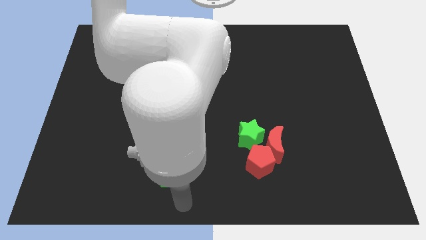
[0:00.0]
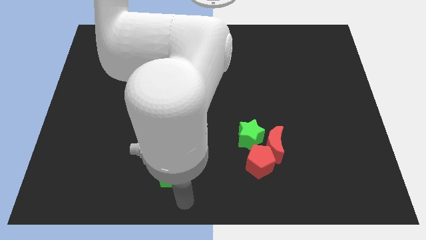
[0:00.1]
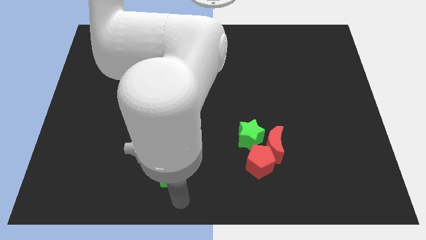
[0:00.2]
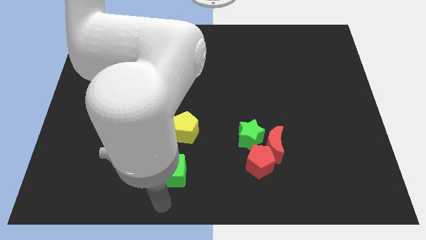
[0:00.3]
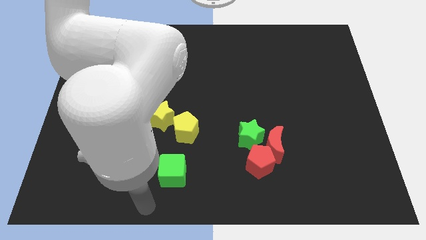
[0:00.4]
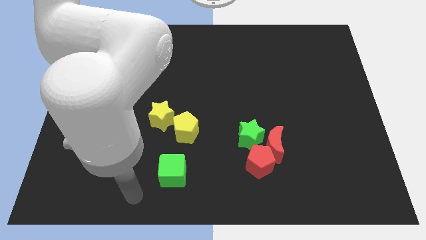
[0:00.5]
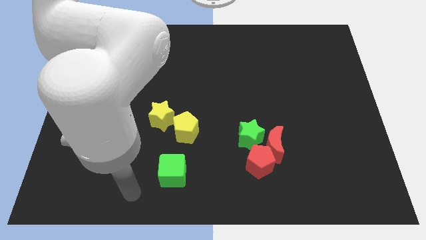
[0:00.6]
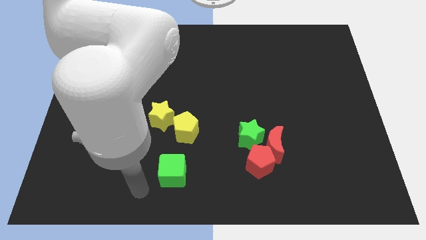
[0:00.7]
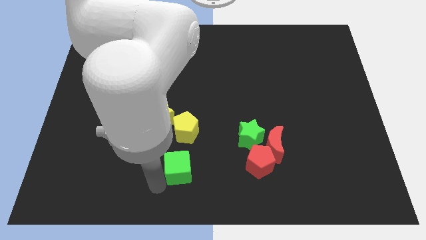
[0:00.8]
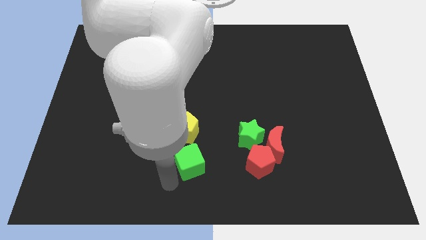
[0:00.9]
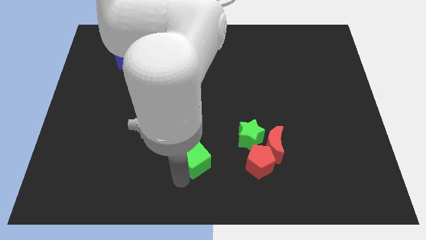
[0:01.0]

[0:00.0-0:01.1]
move the green cube towards the yellow pentagon

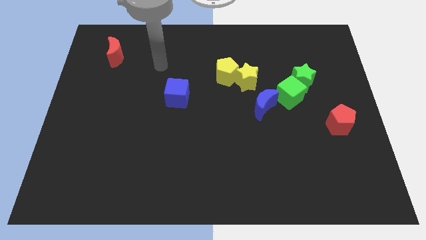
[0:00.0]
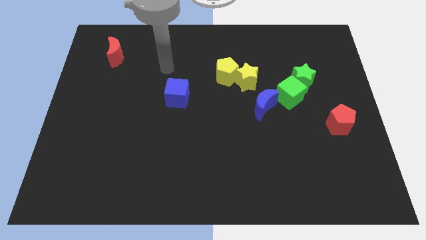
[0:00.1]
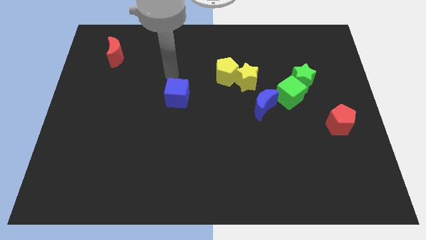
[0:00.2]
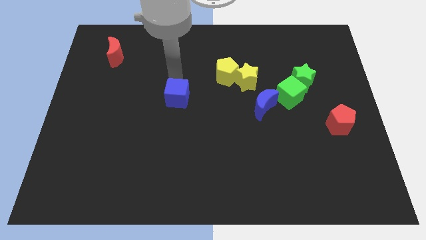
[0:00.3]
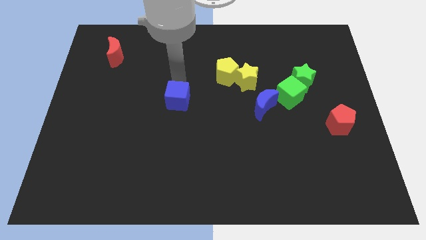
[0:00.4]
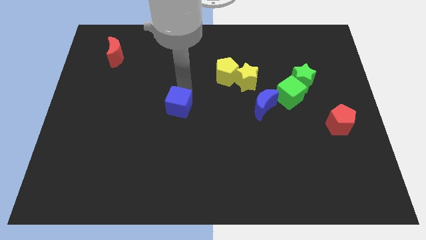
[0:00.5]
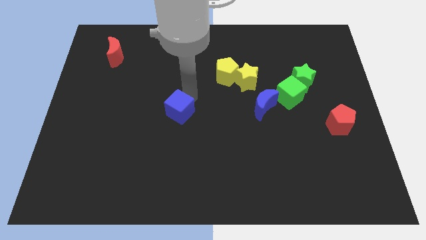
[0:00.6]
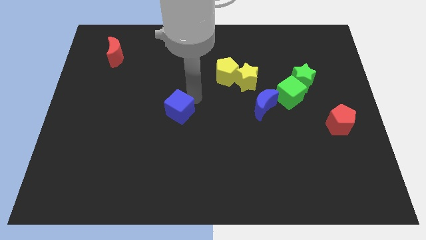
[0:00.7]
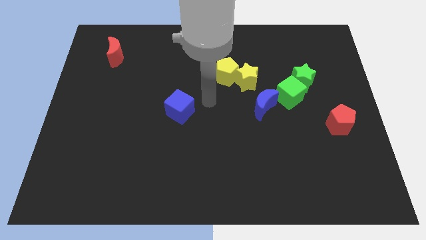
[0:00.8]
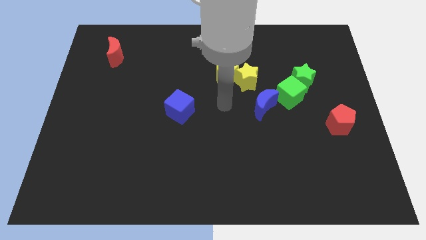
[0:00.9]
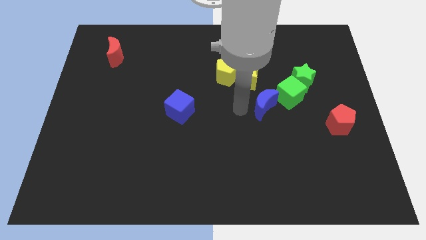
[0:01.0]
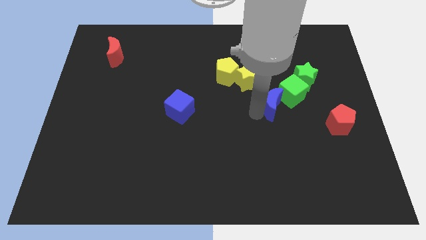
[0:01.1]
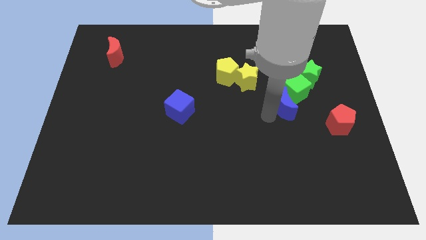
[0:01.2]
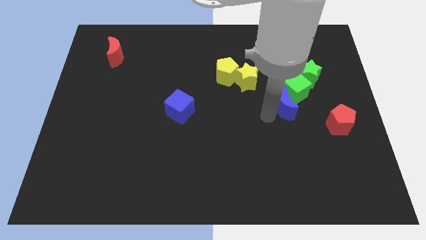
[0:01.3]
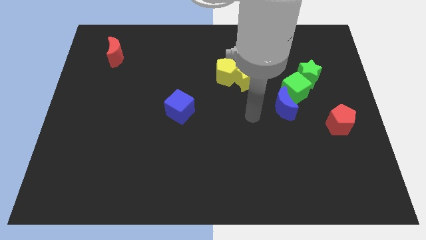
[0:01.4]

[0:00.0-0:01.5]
slightly push the blue cube towards the center

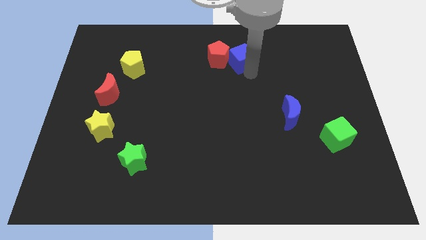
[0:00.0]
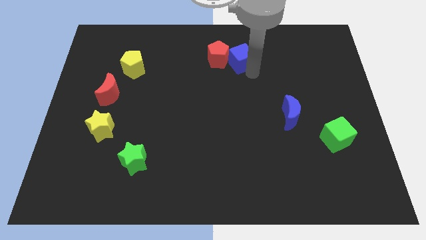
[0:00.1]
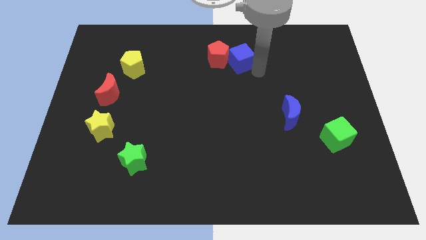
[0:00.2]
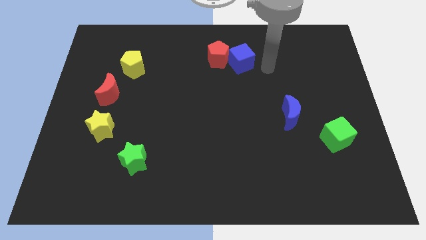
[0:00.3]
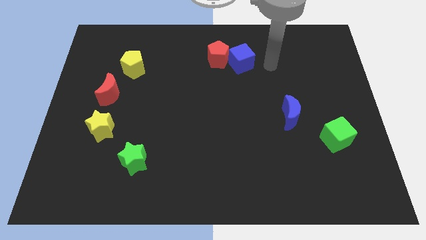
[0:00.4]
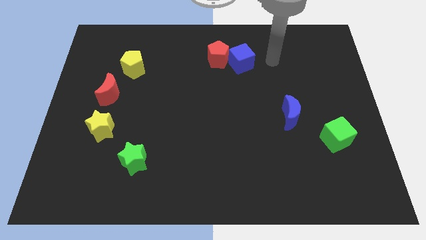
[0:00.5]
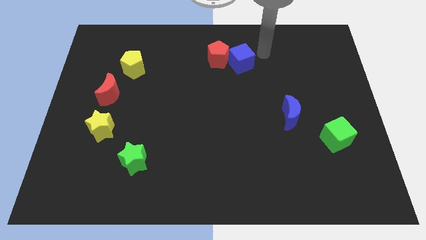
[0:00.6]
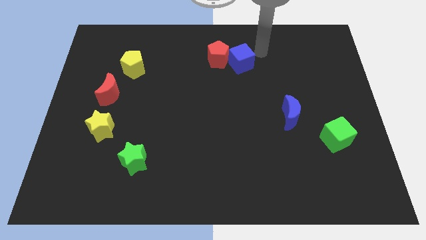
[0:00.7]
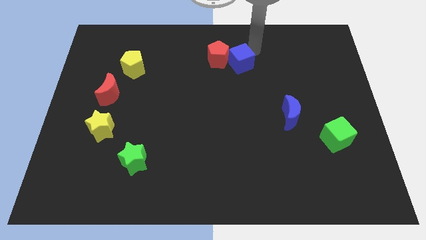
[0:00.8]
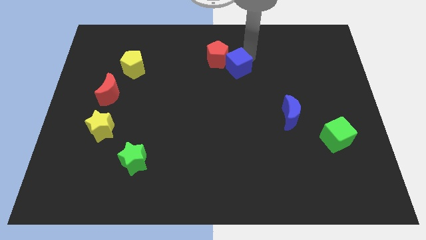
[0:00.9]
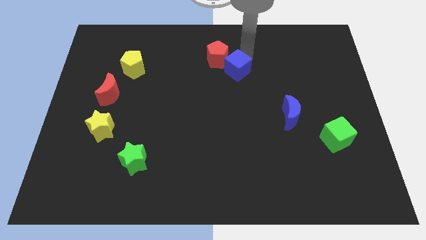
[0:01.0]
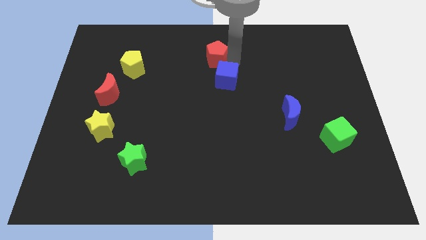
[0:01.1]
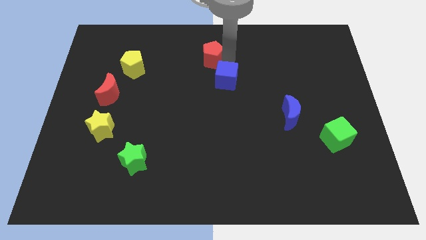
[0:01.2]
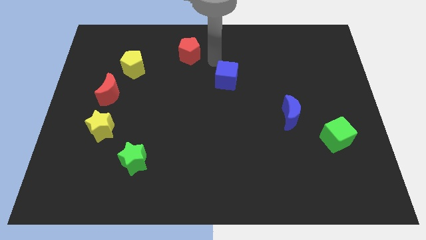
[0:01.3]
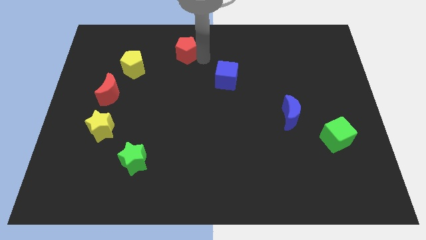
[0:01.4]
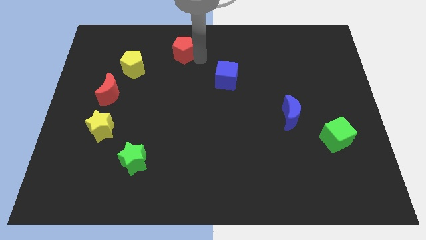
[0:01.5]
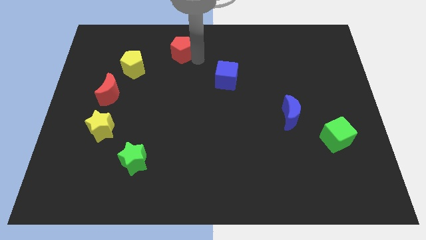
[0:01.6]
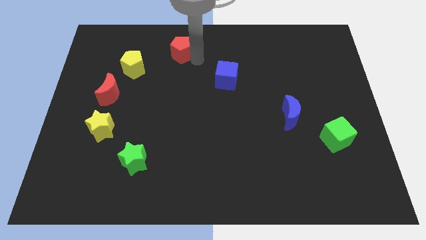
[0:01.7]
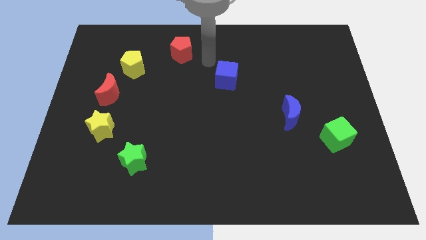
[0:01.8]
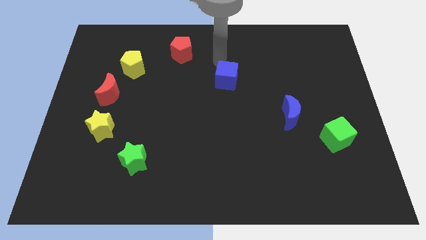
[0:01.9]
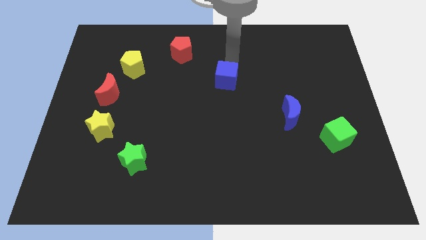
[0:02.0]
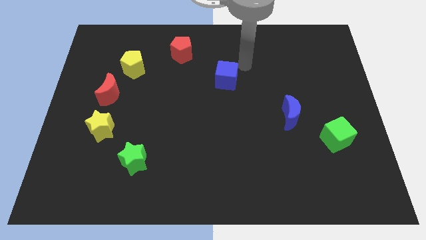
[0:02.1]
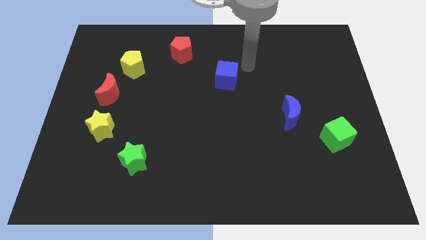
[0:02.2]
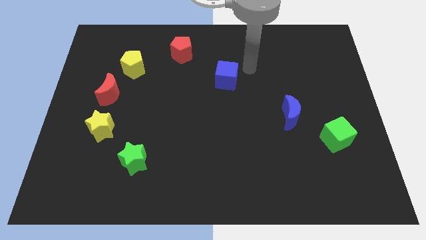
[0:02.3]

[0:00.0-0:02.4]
separate the red pentagon from the blue cube

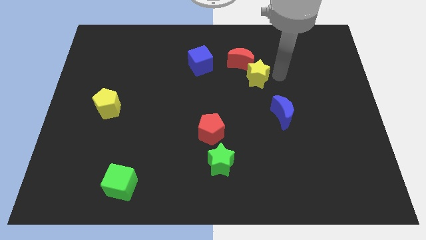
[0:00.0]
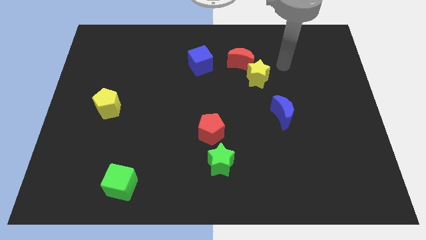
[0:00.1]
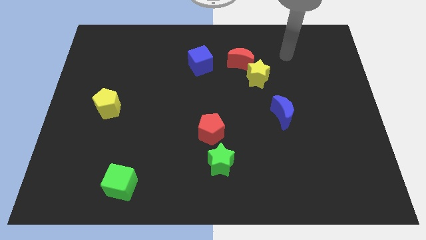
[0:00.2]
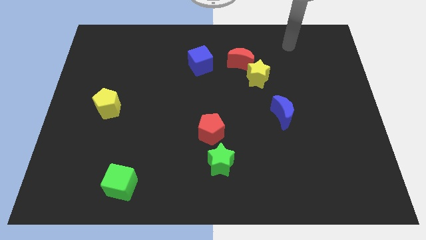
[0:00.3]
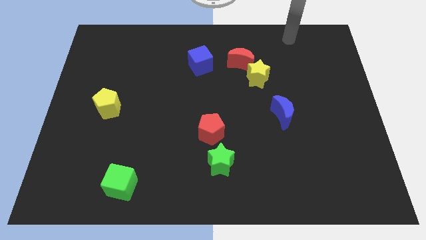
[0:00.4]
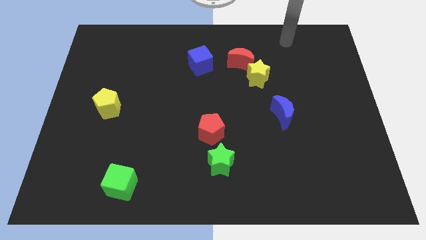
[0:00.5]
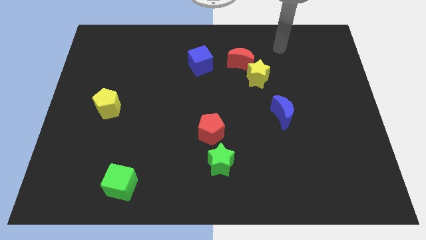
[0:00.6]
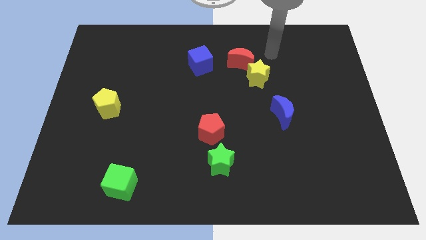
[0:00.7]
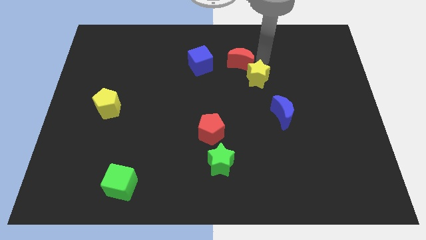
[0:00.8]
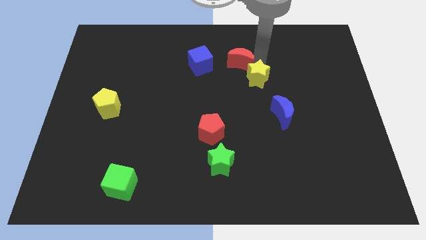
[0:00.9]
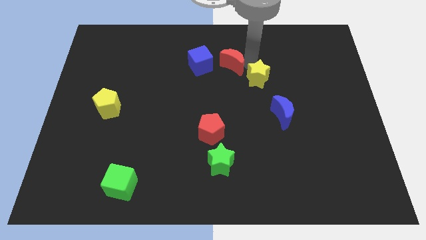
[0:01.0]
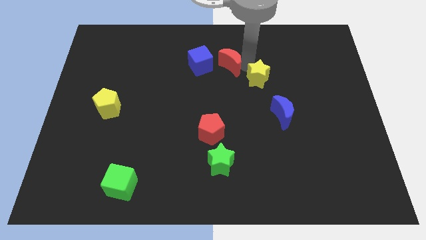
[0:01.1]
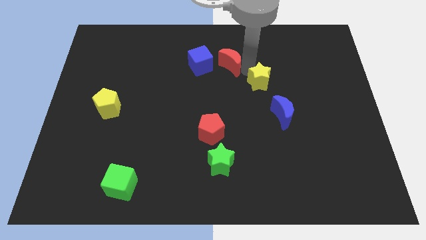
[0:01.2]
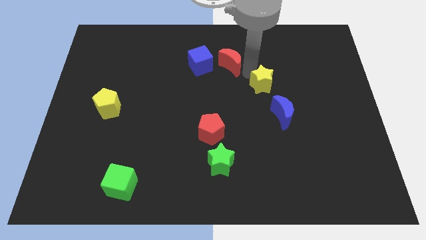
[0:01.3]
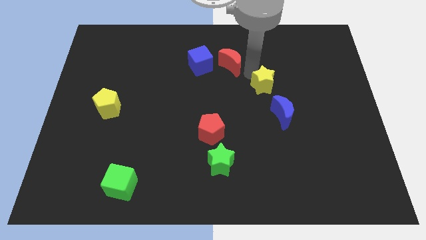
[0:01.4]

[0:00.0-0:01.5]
push red crescent towards blue cube

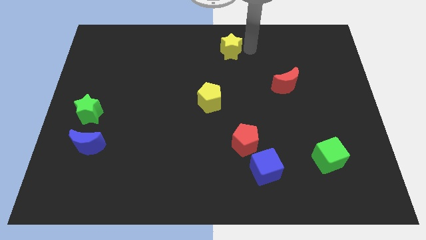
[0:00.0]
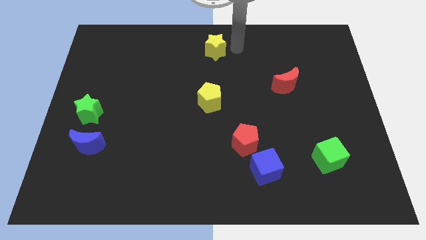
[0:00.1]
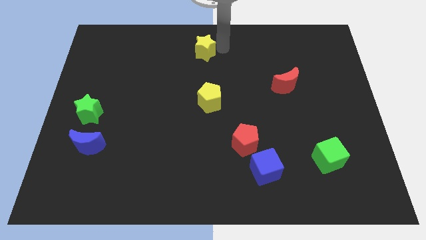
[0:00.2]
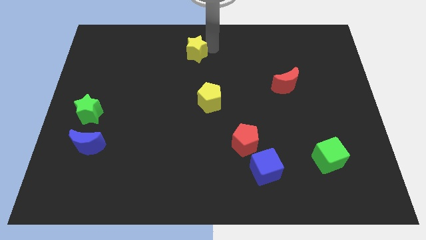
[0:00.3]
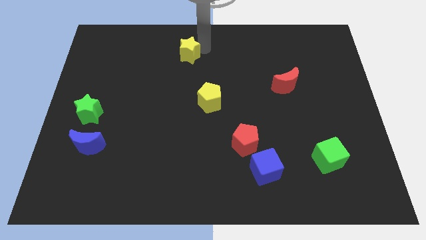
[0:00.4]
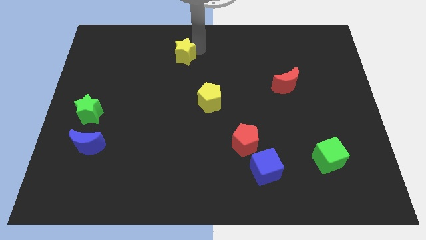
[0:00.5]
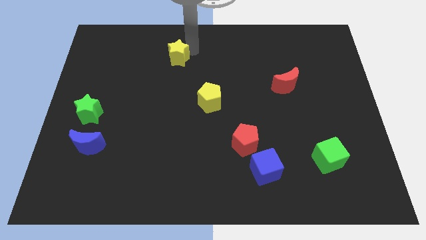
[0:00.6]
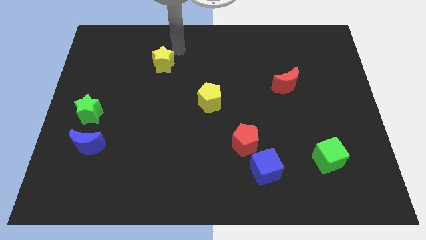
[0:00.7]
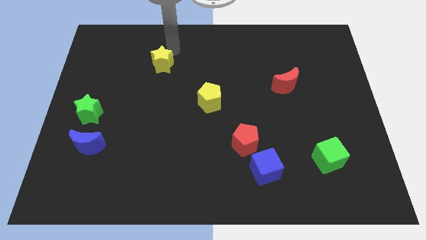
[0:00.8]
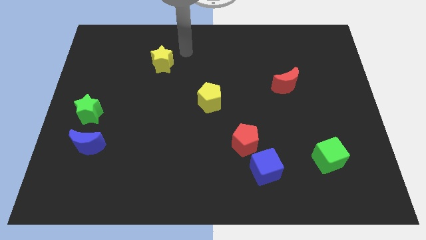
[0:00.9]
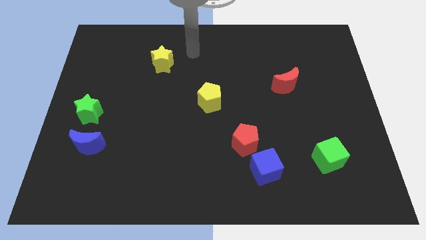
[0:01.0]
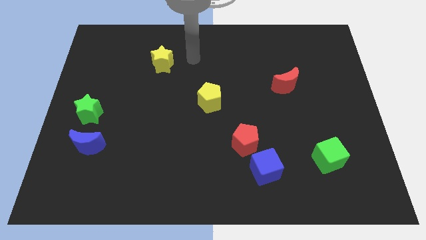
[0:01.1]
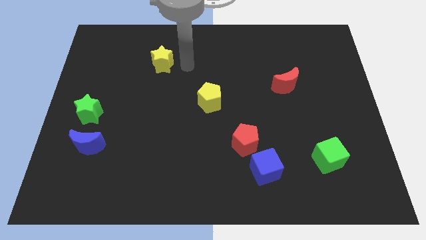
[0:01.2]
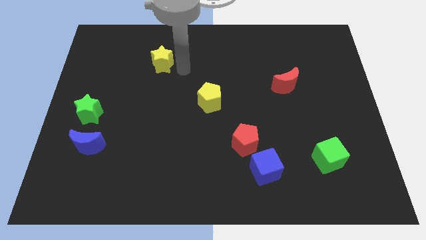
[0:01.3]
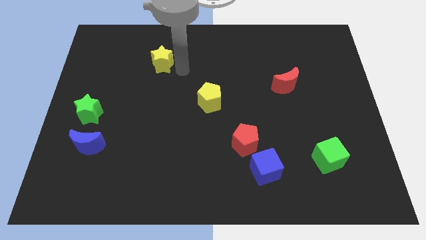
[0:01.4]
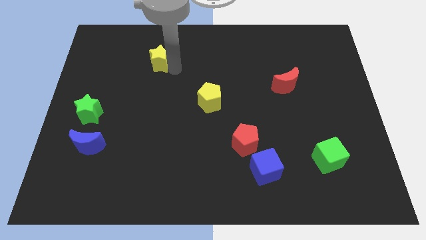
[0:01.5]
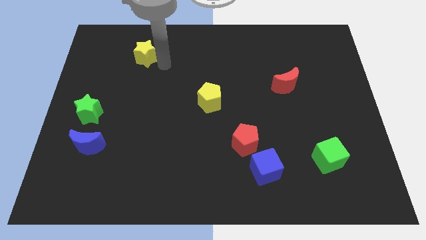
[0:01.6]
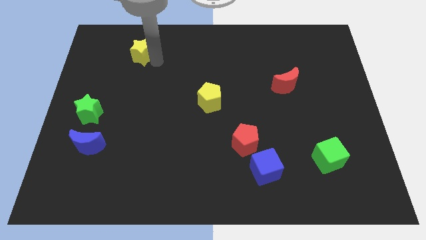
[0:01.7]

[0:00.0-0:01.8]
move the yellow star to the top left side of the table

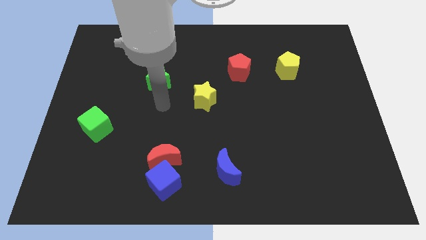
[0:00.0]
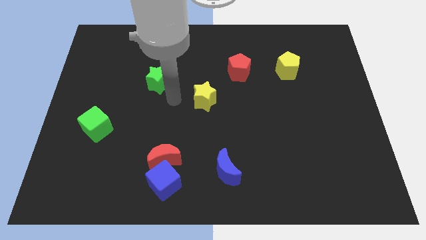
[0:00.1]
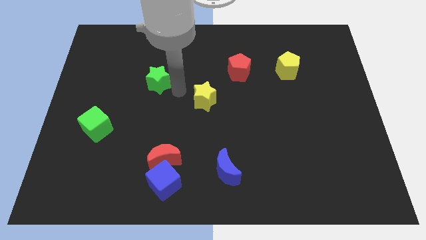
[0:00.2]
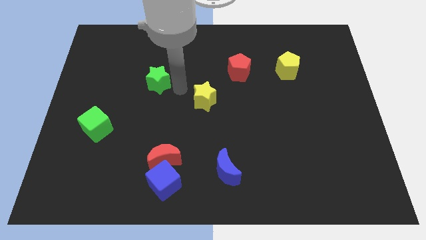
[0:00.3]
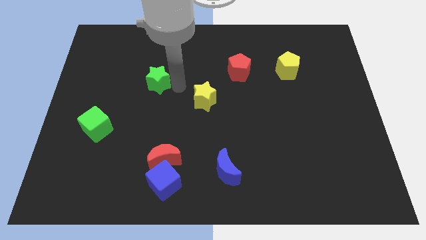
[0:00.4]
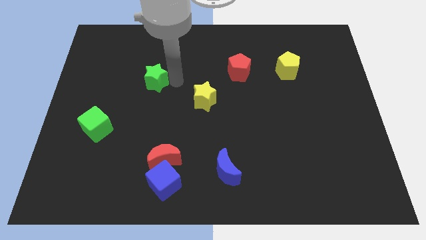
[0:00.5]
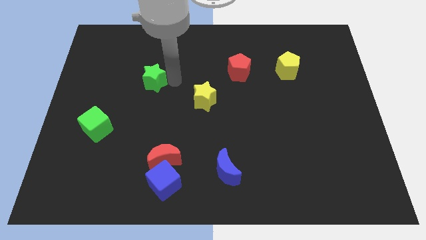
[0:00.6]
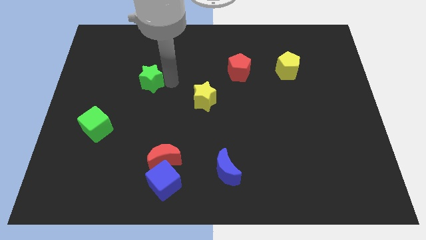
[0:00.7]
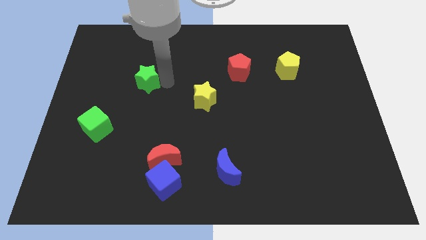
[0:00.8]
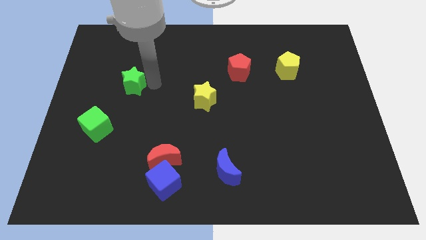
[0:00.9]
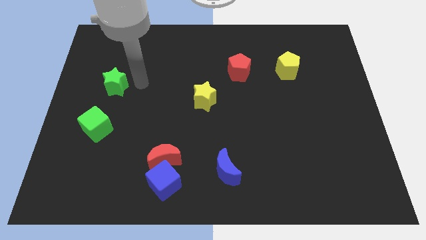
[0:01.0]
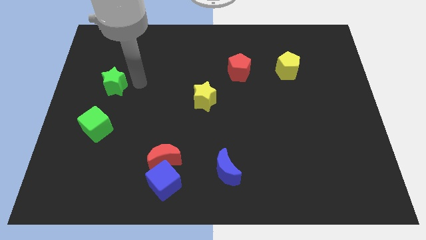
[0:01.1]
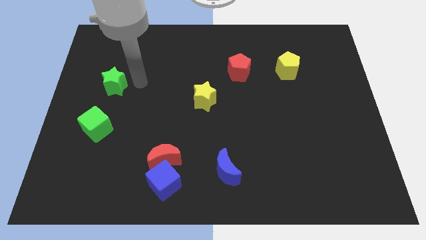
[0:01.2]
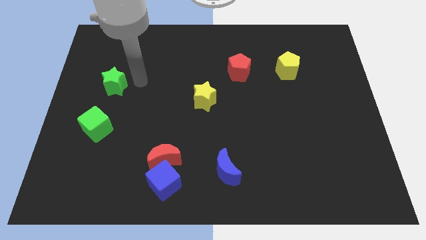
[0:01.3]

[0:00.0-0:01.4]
move the green star towards the left side of the board
